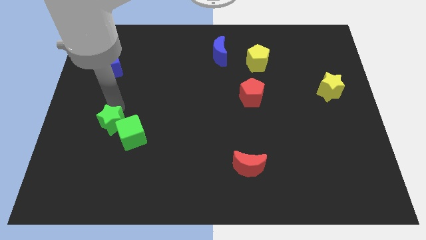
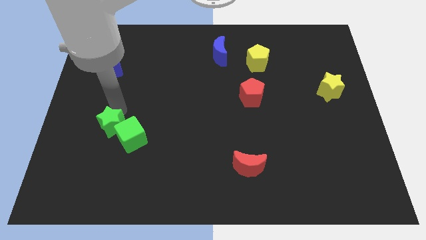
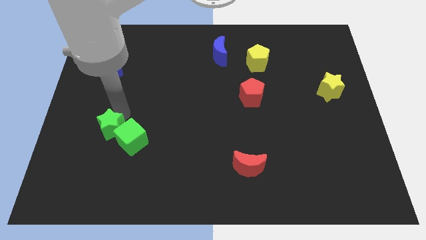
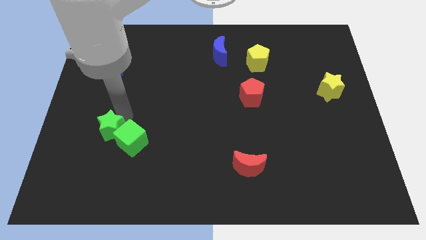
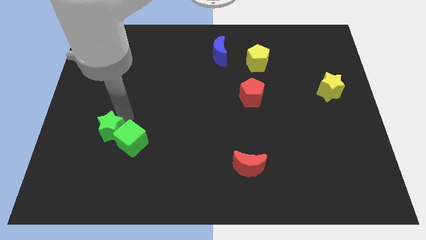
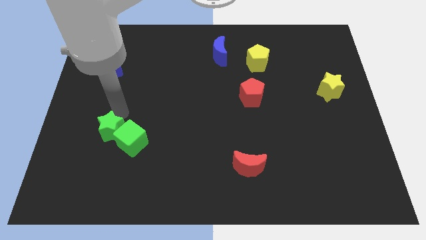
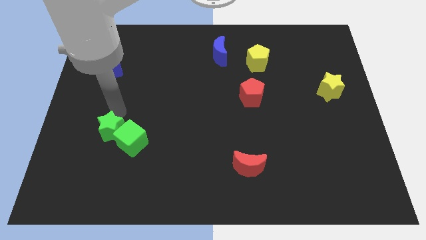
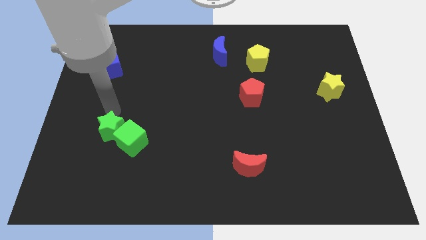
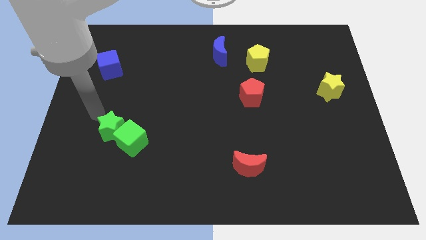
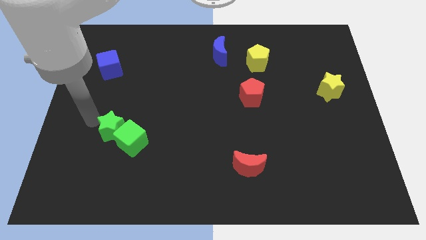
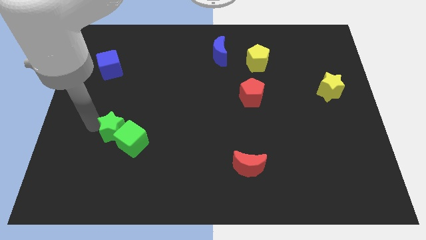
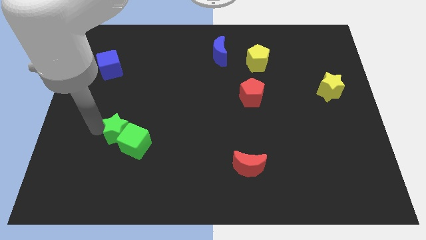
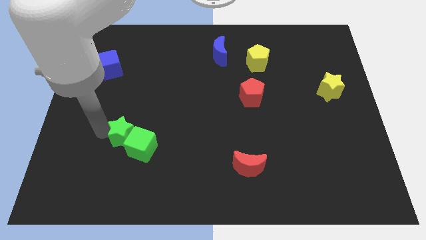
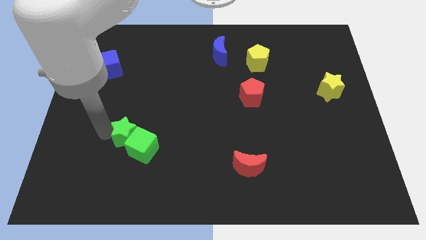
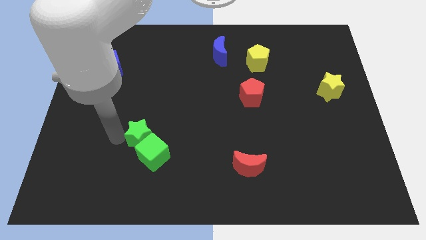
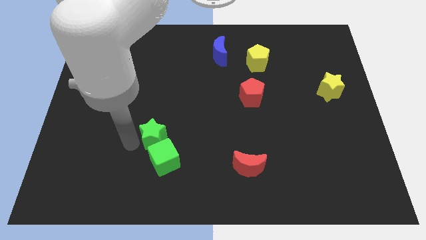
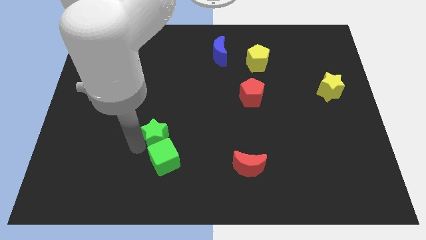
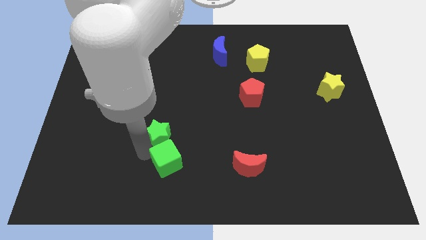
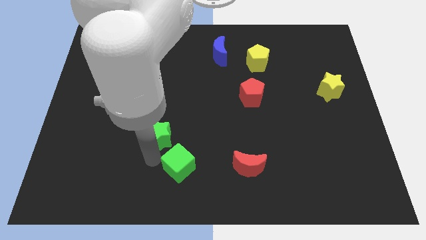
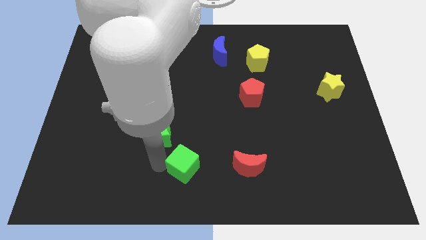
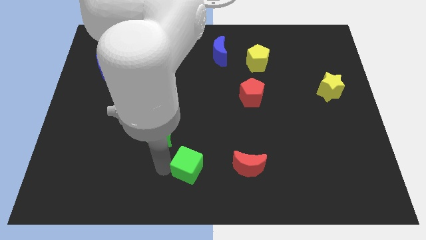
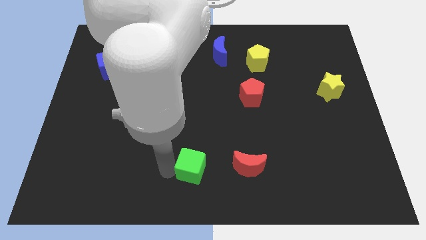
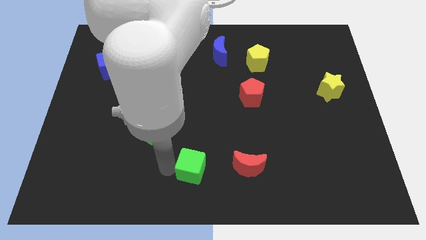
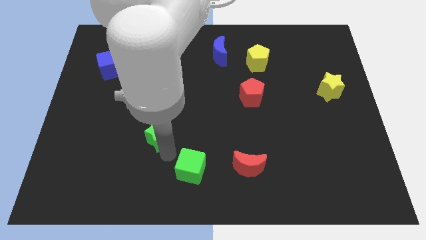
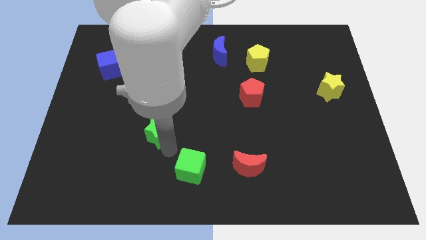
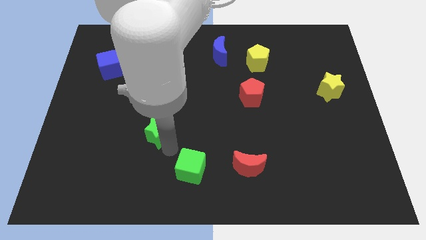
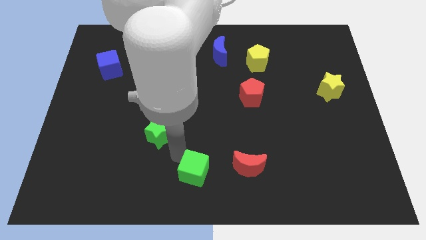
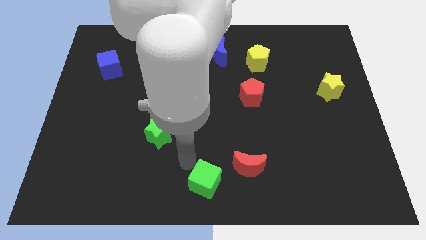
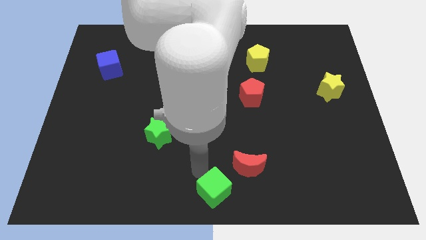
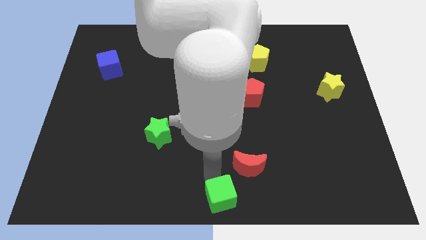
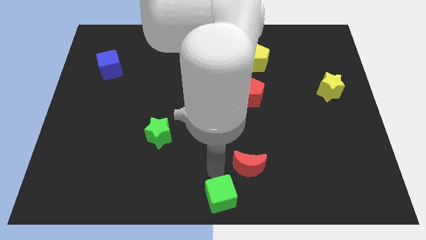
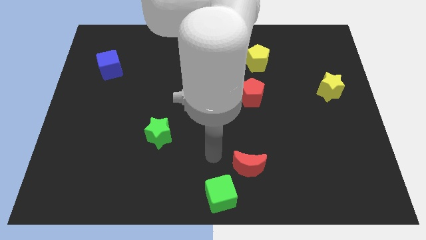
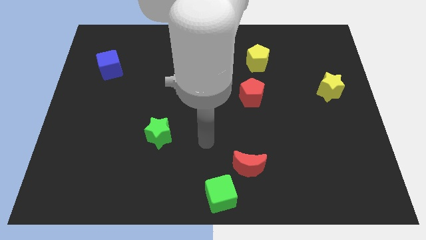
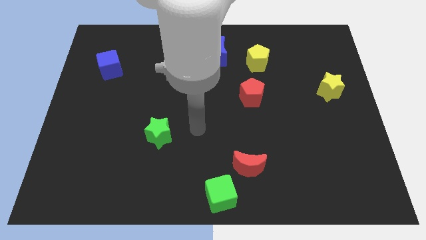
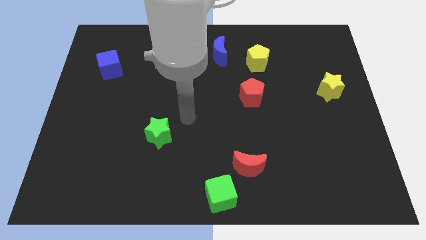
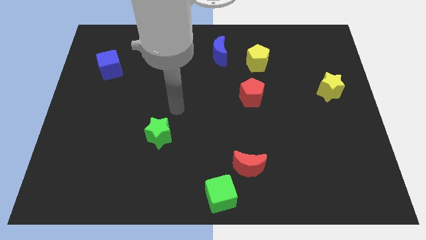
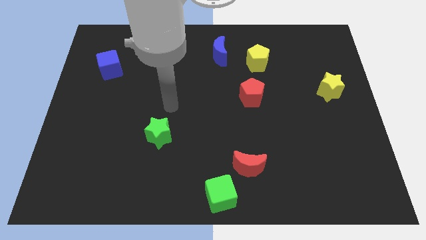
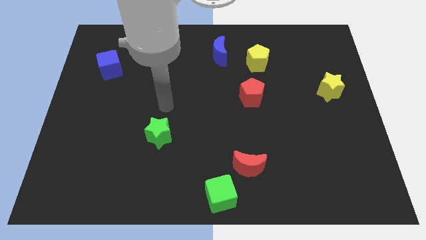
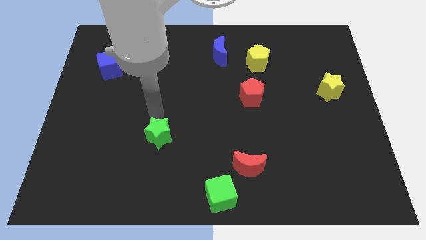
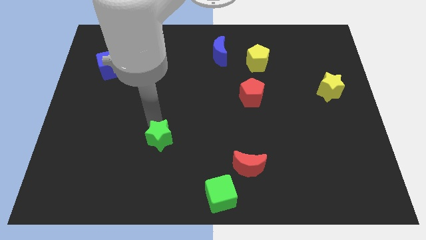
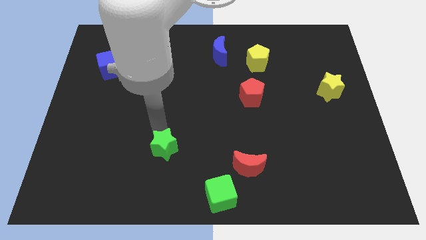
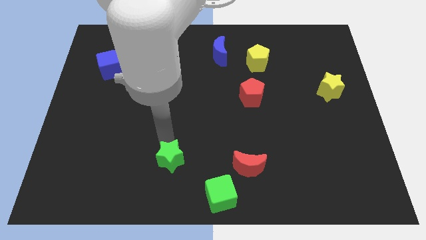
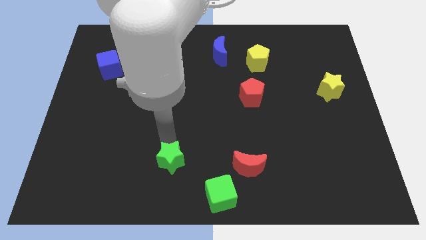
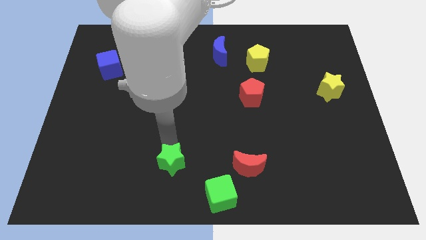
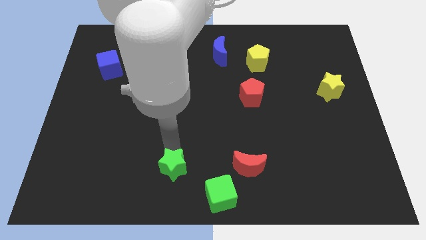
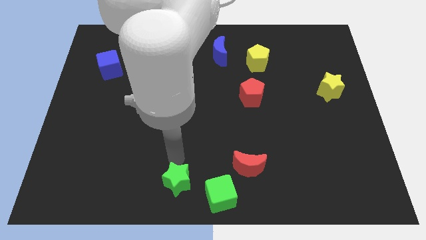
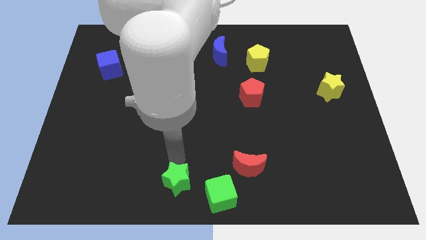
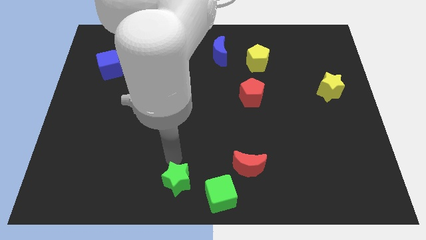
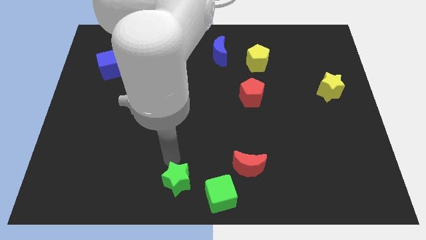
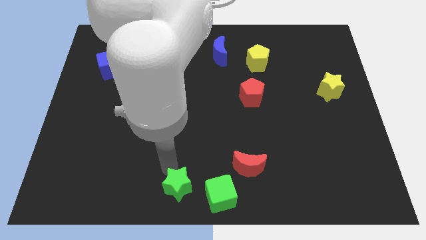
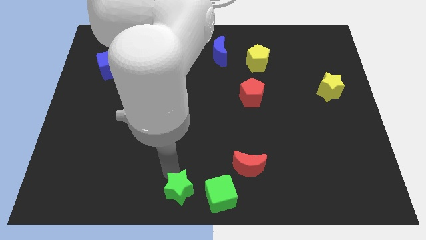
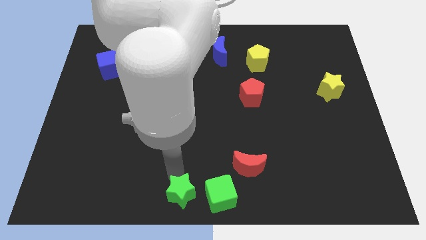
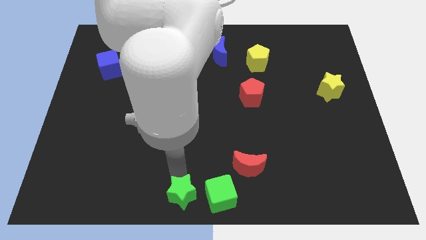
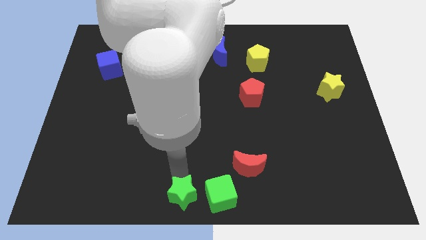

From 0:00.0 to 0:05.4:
move the green blocks to the bottom center of the table

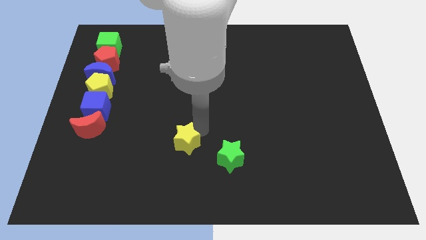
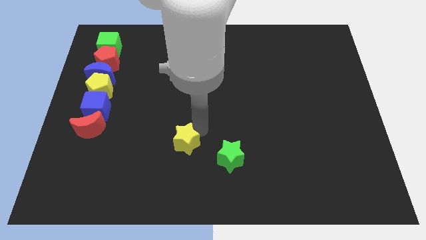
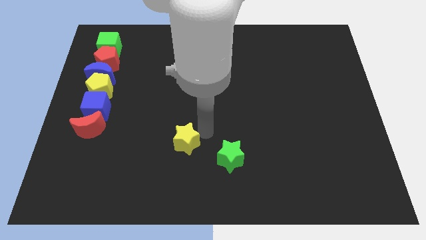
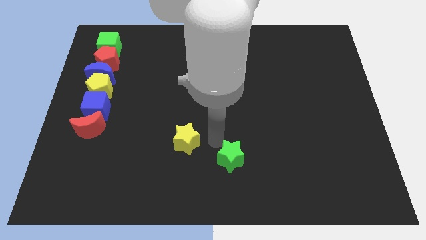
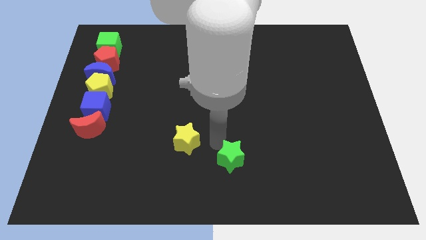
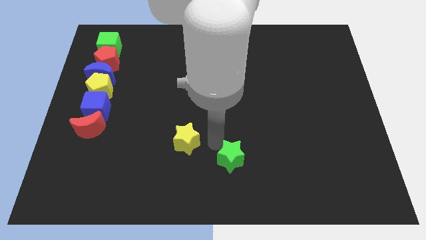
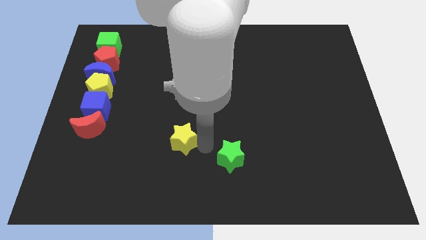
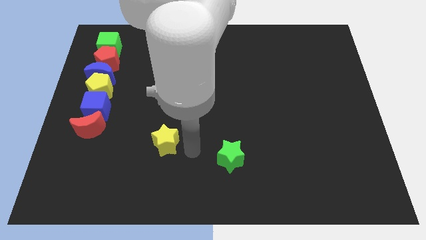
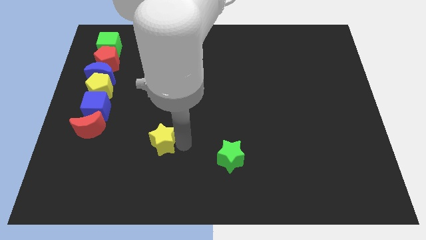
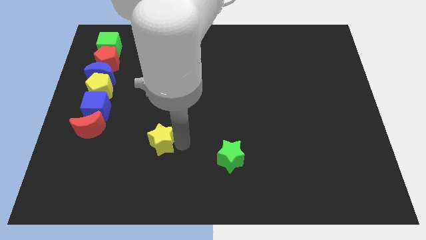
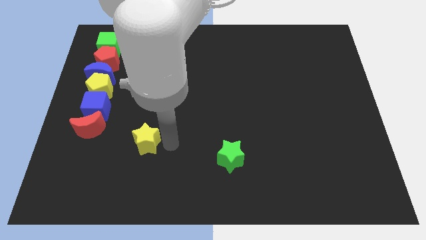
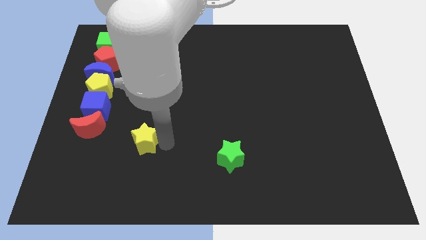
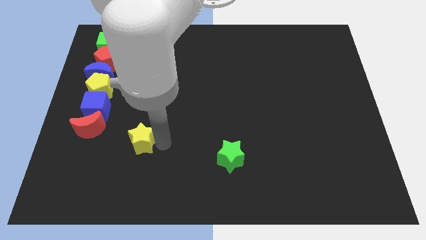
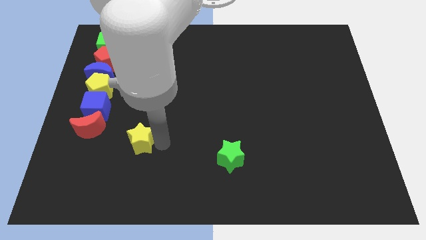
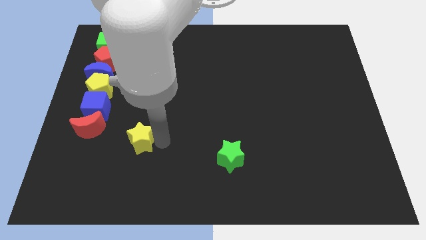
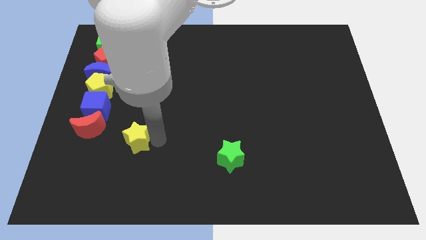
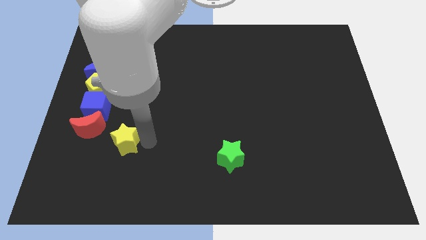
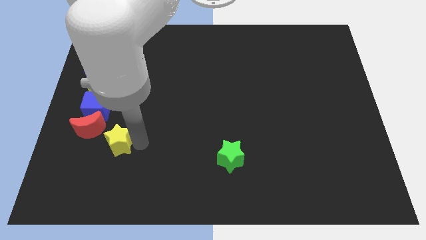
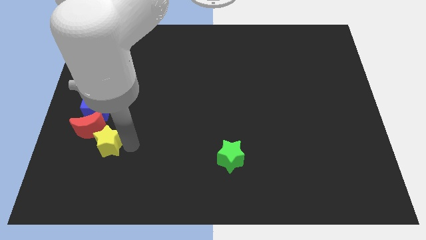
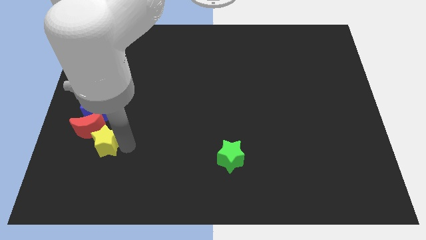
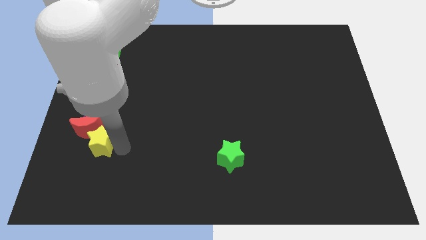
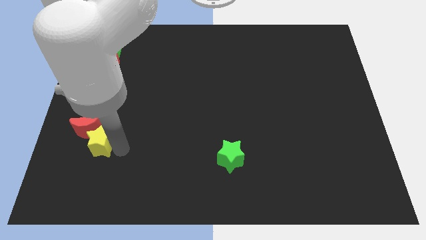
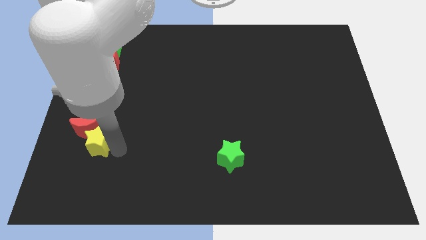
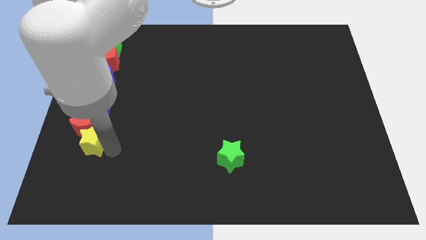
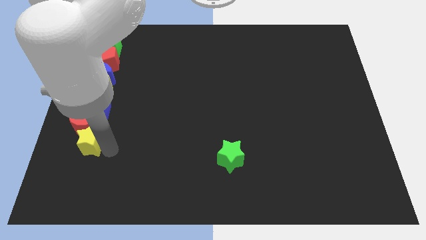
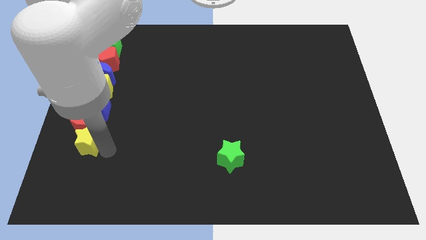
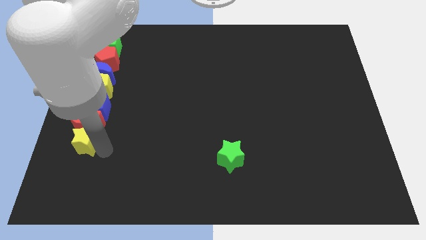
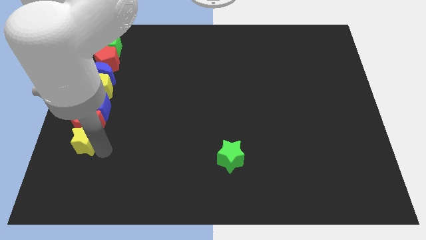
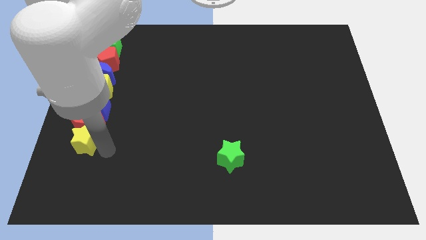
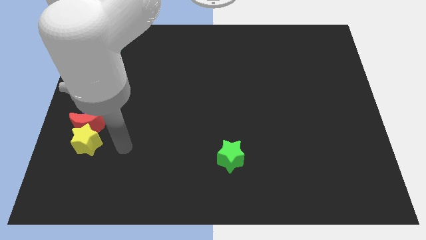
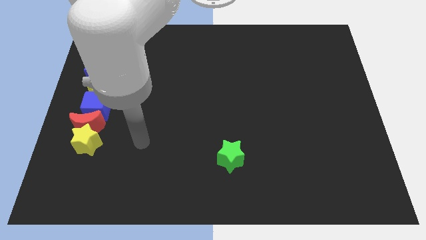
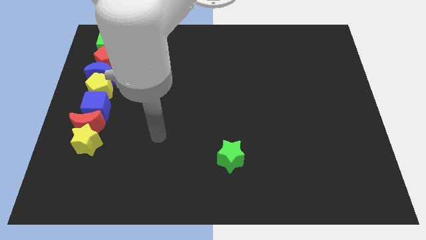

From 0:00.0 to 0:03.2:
move the yellow star to the bottom of the red moon

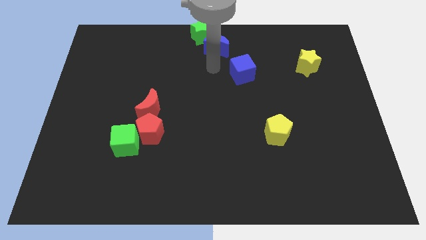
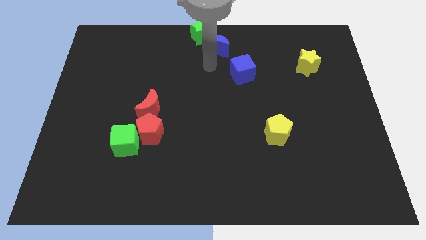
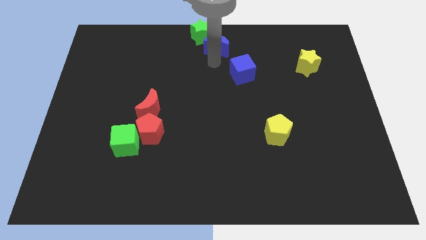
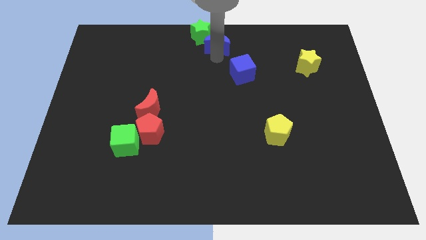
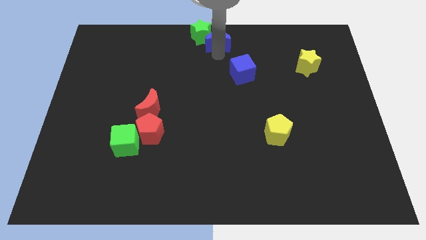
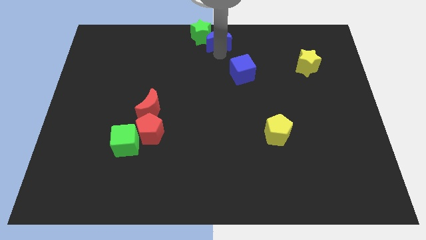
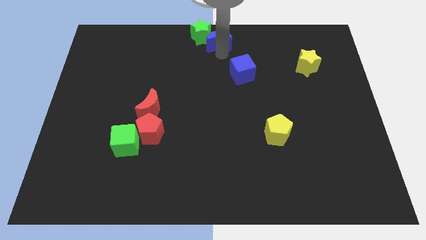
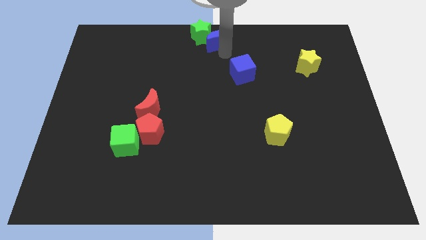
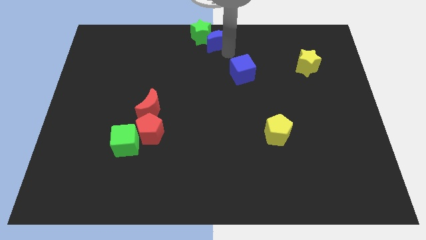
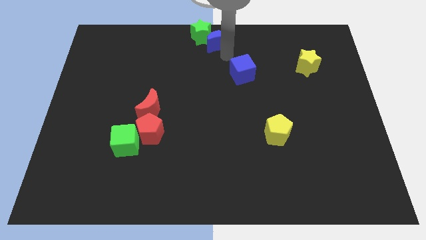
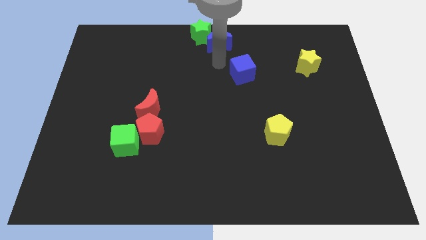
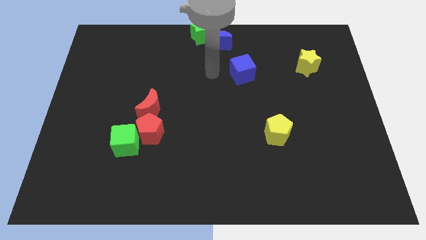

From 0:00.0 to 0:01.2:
push the blue moon slightly upwards
